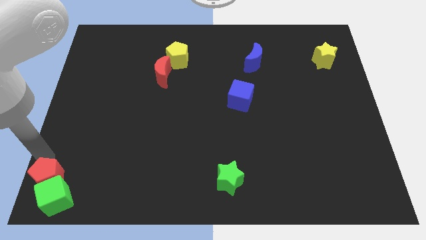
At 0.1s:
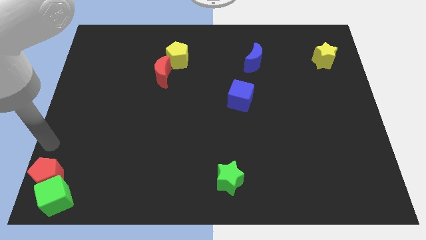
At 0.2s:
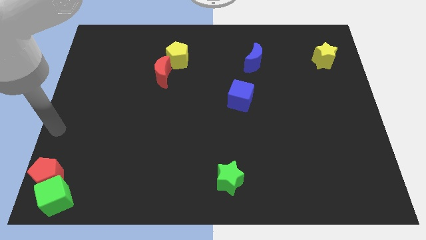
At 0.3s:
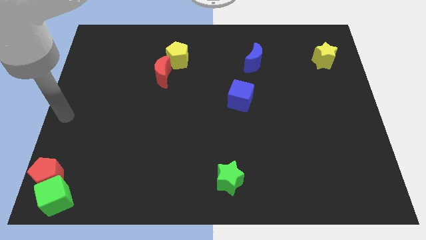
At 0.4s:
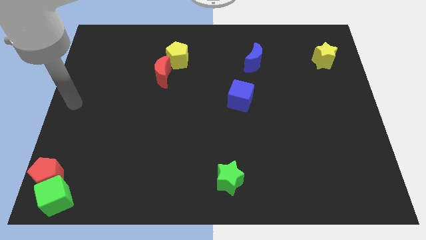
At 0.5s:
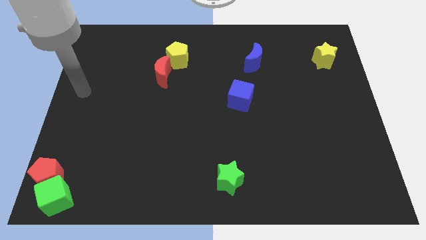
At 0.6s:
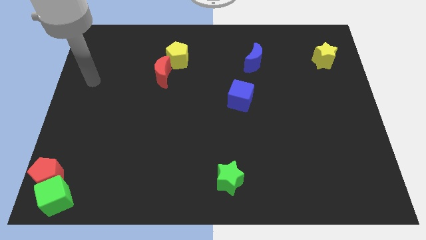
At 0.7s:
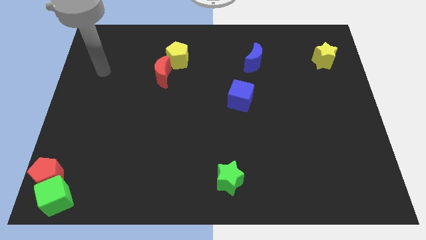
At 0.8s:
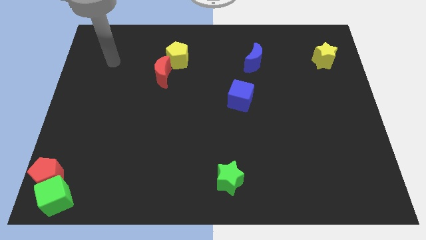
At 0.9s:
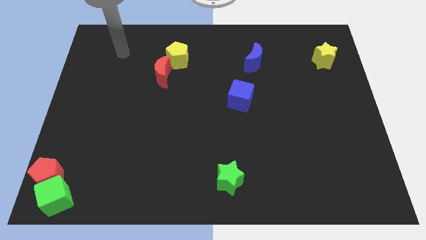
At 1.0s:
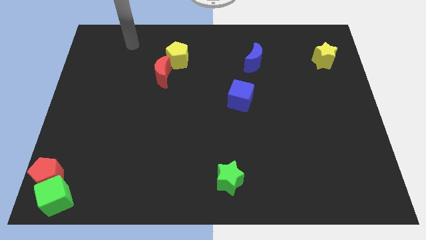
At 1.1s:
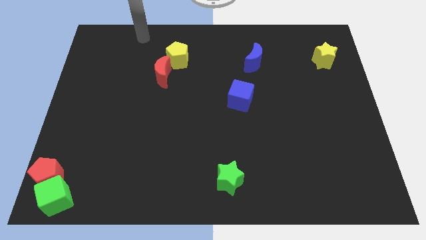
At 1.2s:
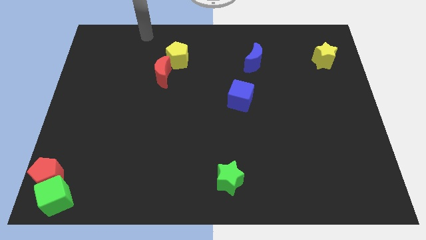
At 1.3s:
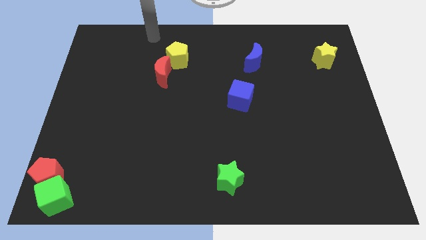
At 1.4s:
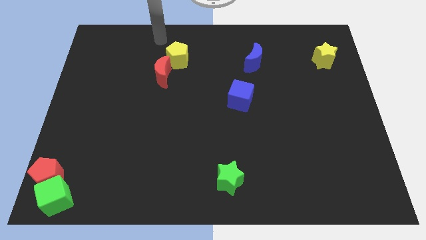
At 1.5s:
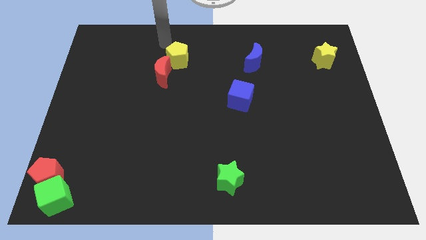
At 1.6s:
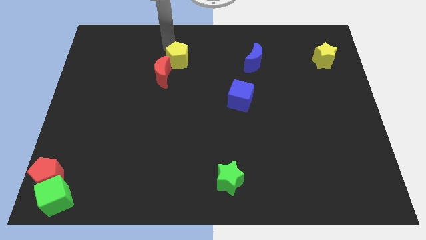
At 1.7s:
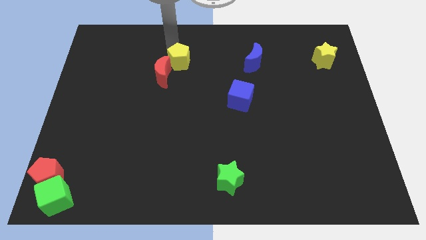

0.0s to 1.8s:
move your arm towards the top of yellow pentagon

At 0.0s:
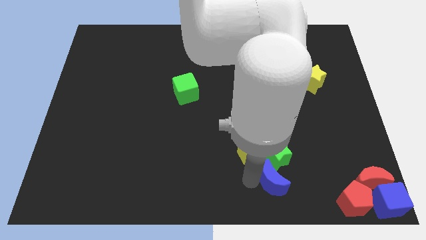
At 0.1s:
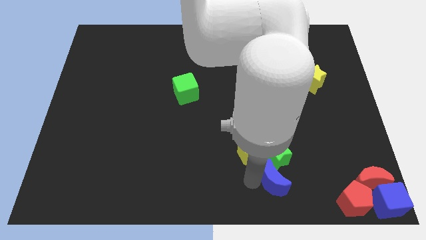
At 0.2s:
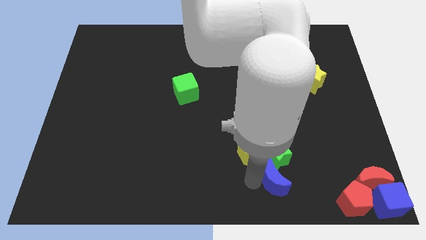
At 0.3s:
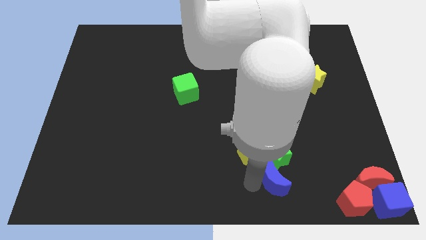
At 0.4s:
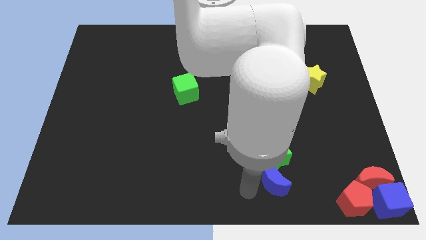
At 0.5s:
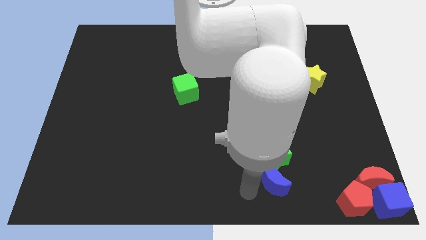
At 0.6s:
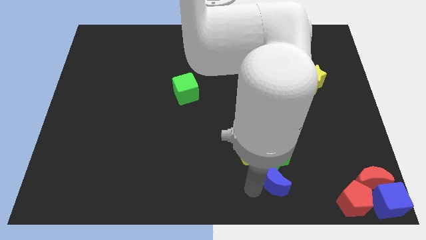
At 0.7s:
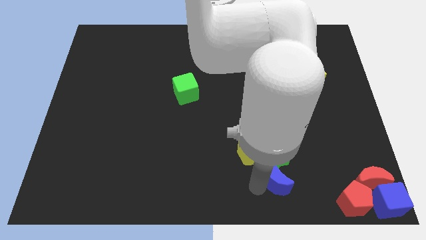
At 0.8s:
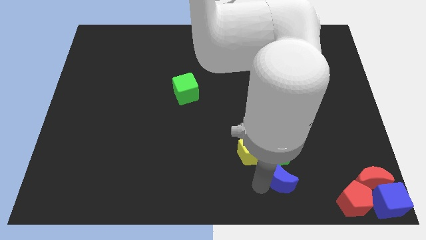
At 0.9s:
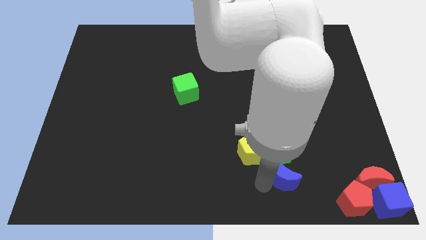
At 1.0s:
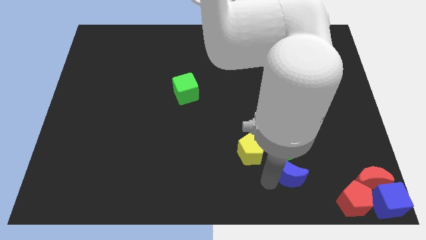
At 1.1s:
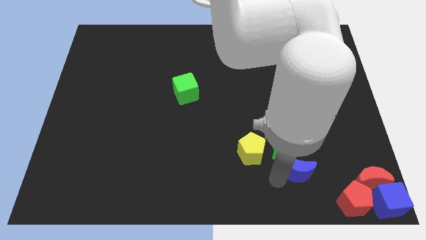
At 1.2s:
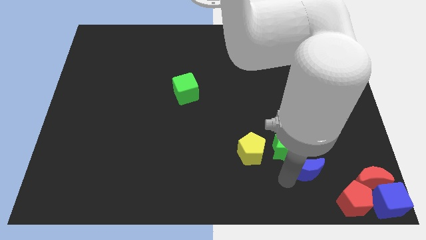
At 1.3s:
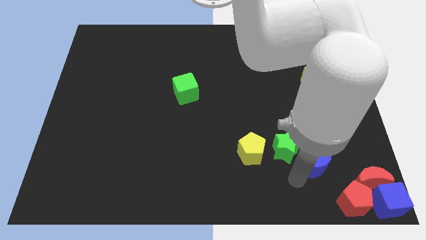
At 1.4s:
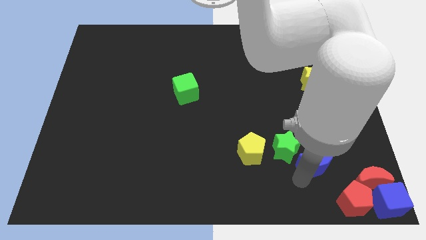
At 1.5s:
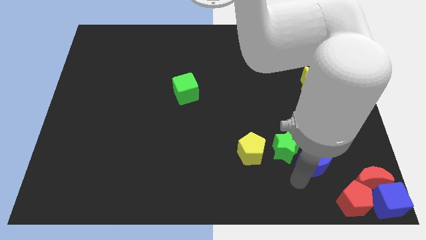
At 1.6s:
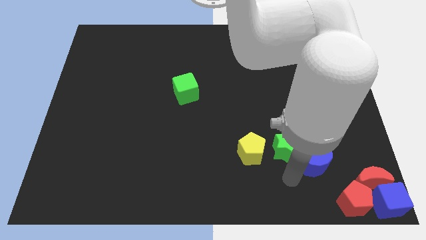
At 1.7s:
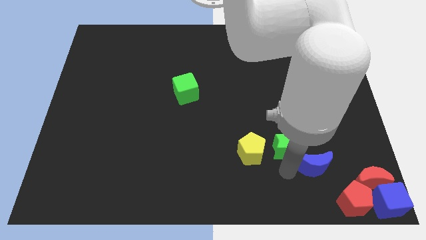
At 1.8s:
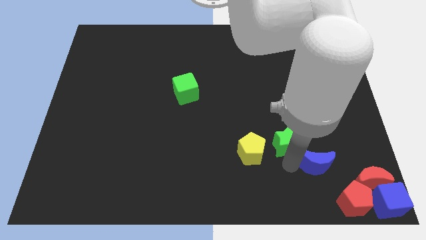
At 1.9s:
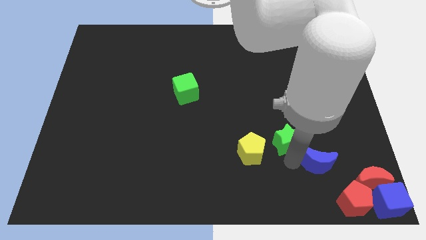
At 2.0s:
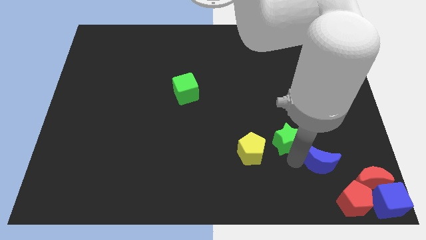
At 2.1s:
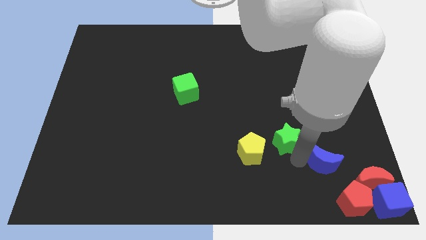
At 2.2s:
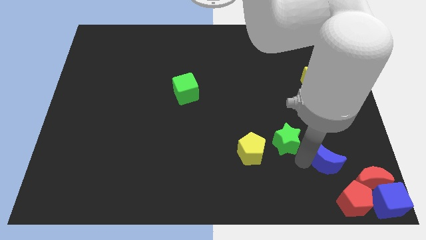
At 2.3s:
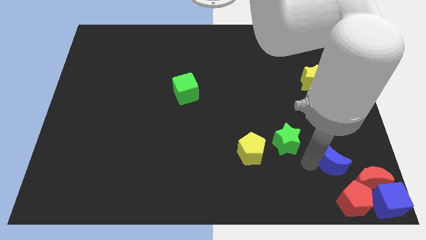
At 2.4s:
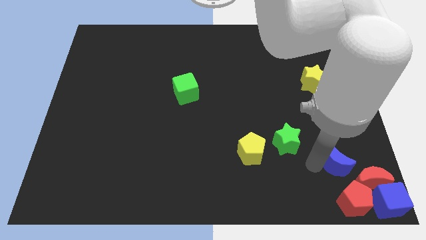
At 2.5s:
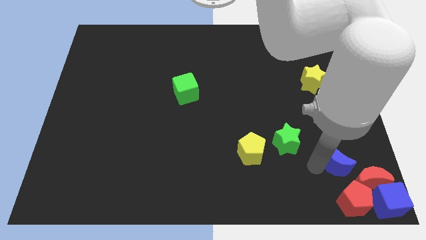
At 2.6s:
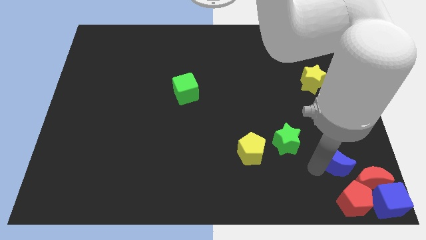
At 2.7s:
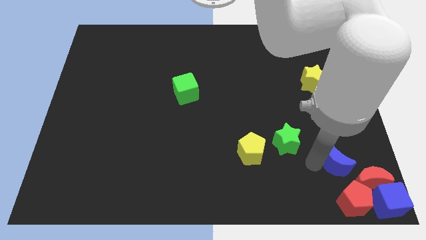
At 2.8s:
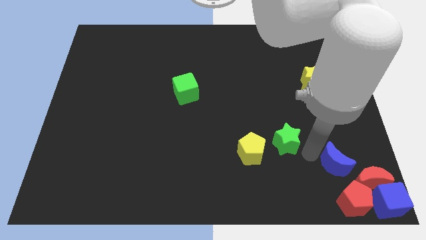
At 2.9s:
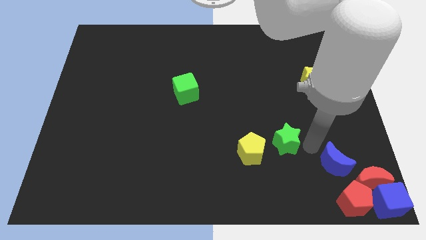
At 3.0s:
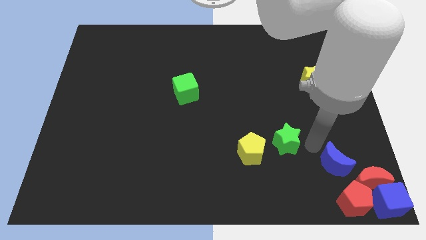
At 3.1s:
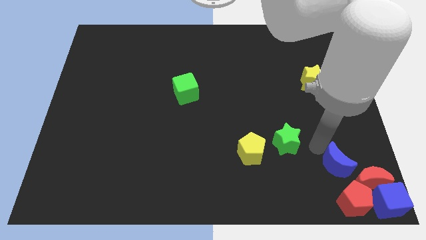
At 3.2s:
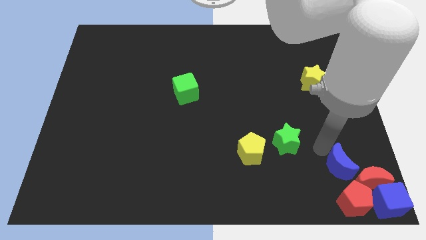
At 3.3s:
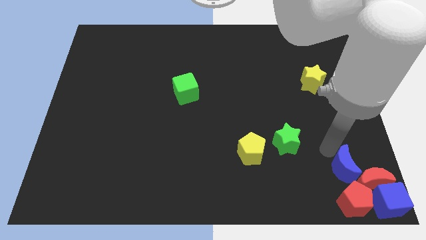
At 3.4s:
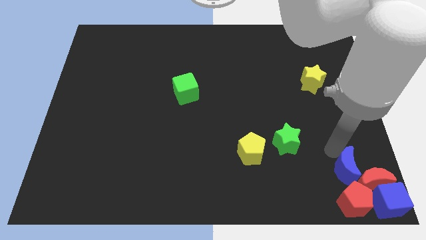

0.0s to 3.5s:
move the blue crescent to the top of the red pentagon

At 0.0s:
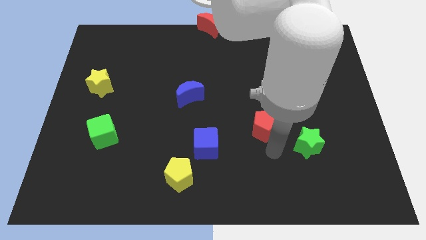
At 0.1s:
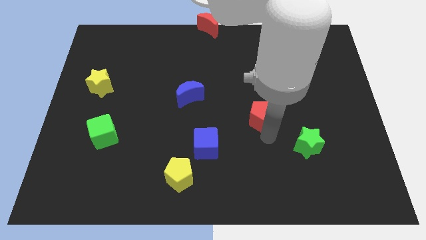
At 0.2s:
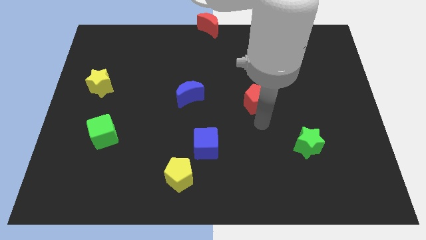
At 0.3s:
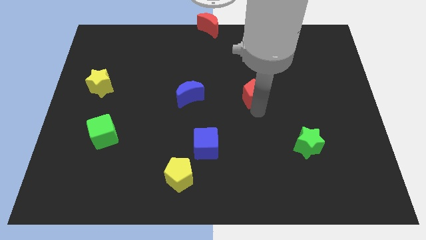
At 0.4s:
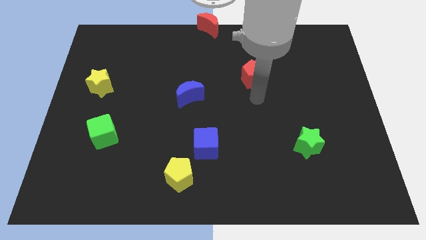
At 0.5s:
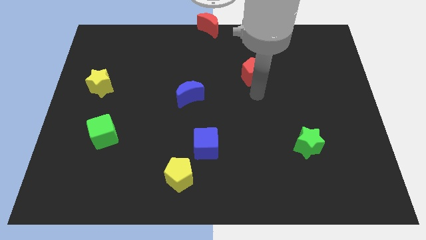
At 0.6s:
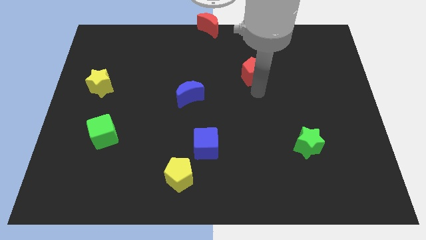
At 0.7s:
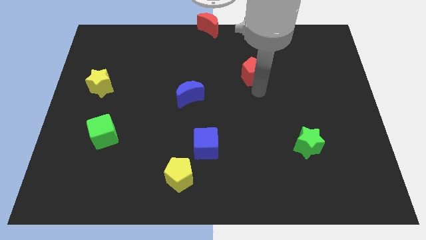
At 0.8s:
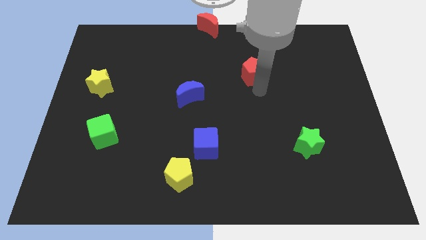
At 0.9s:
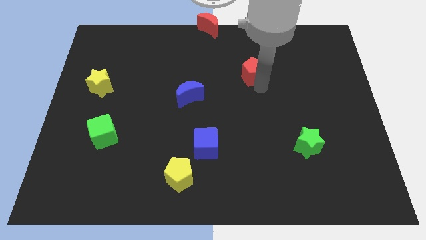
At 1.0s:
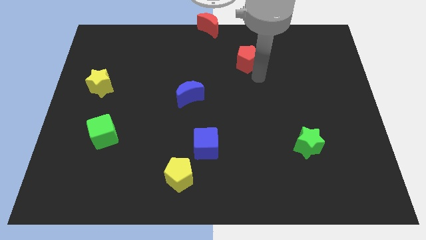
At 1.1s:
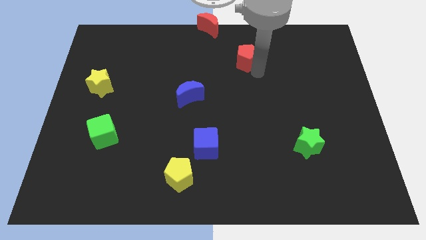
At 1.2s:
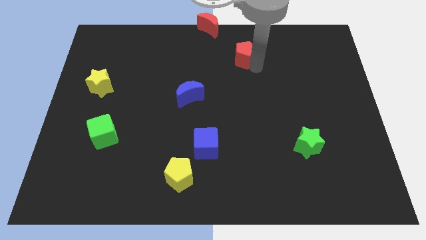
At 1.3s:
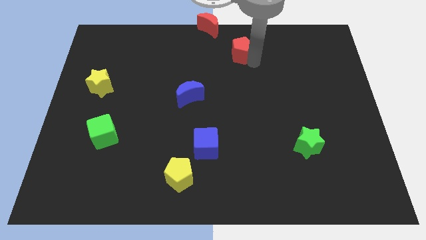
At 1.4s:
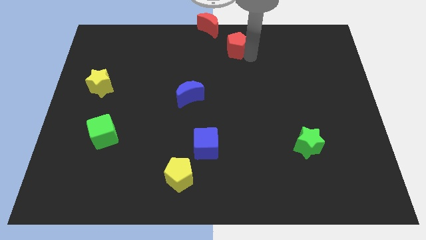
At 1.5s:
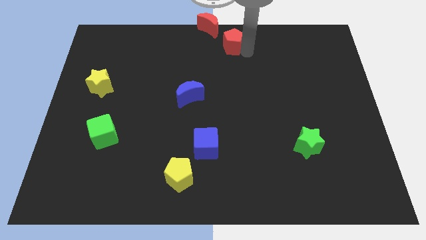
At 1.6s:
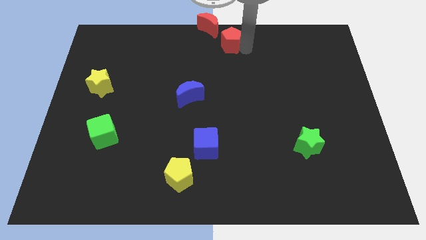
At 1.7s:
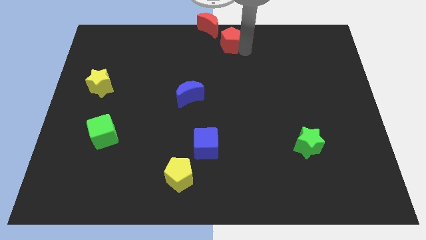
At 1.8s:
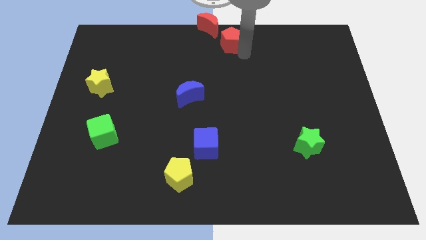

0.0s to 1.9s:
push the red pentagon to the top center of the board

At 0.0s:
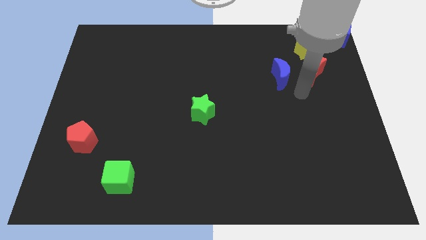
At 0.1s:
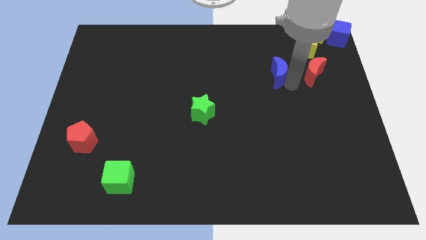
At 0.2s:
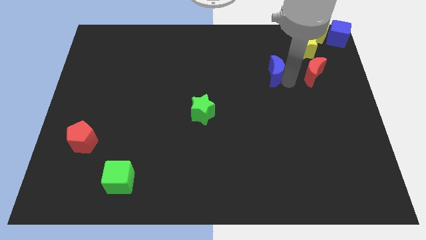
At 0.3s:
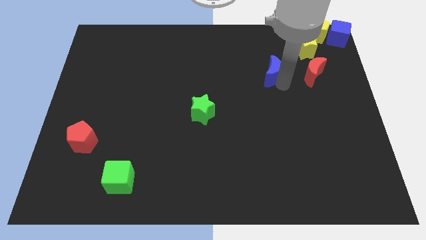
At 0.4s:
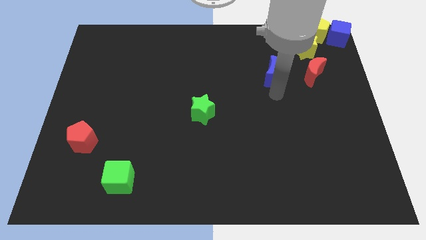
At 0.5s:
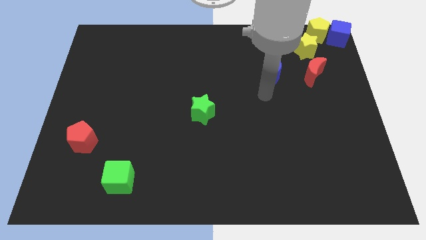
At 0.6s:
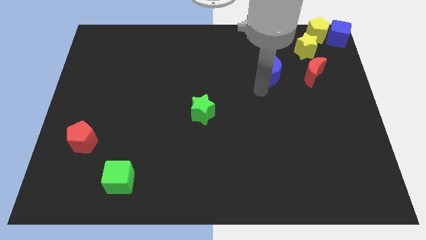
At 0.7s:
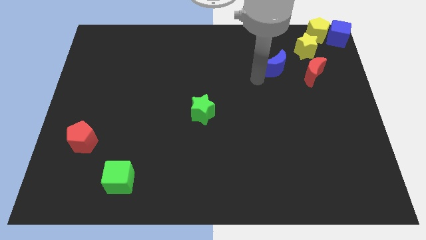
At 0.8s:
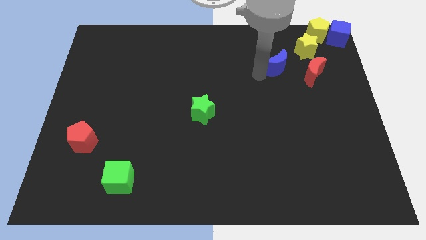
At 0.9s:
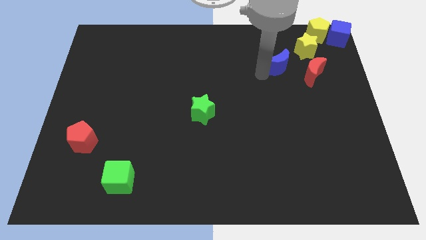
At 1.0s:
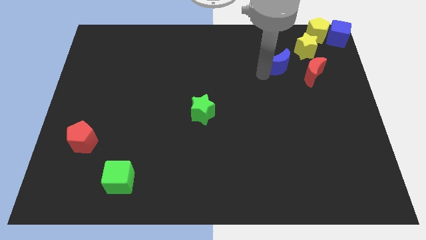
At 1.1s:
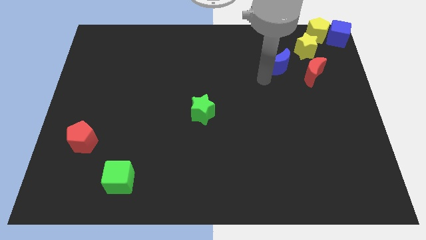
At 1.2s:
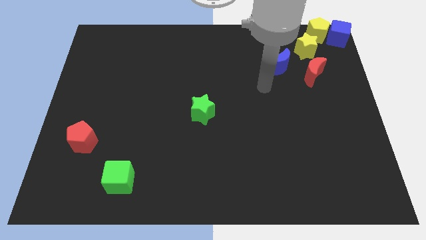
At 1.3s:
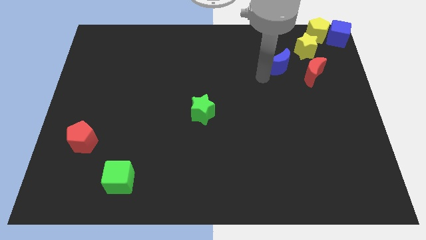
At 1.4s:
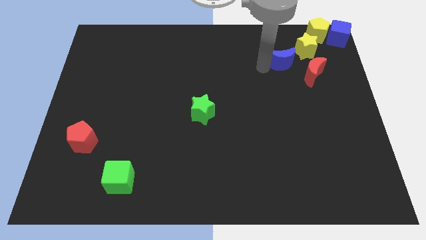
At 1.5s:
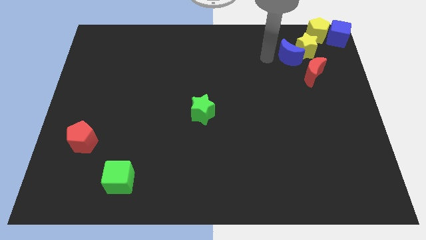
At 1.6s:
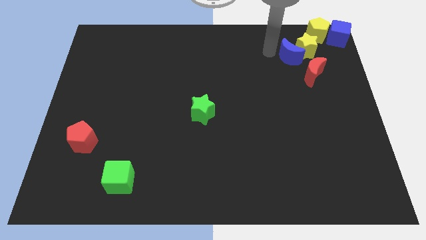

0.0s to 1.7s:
push the blue moon at bottom left of the yellow star

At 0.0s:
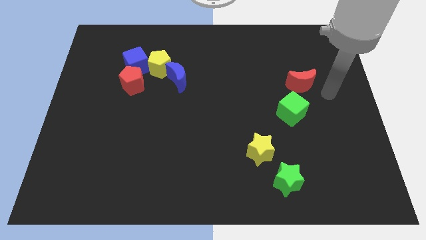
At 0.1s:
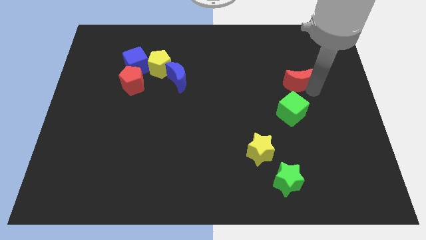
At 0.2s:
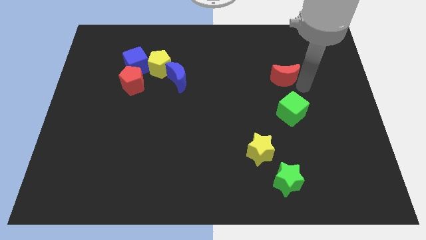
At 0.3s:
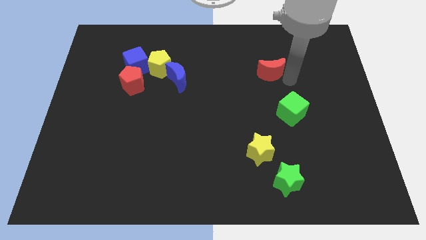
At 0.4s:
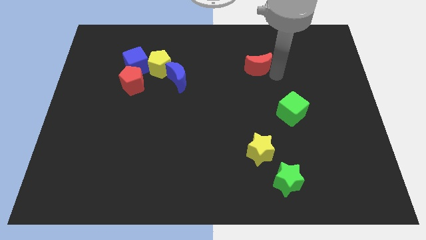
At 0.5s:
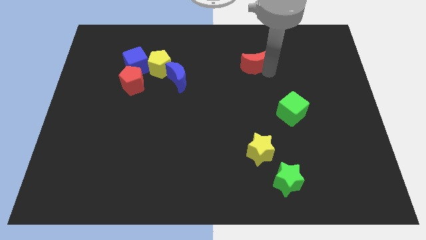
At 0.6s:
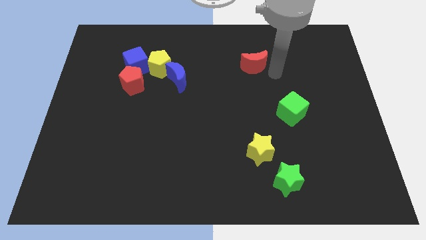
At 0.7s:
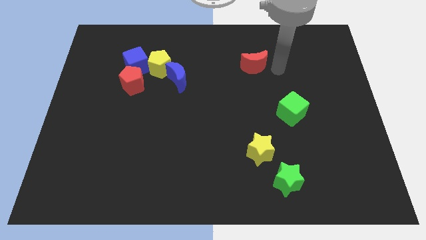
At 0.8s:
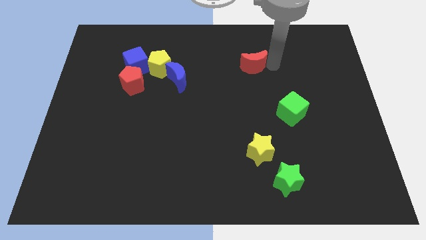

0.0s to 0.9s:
move the red crescent to the top of the board
